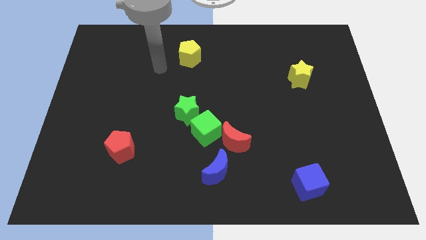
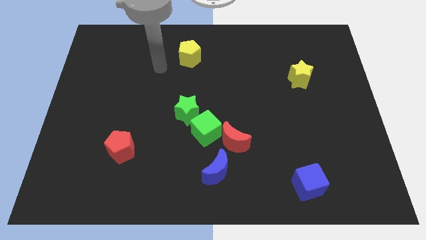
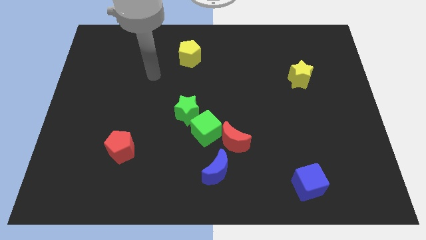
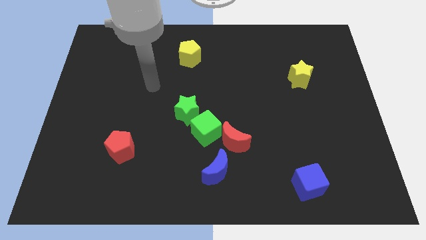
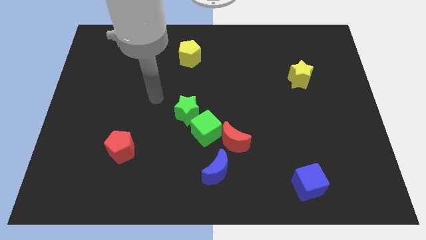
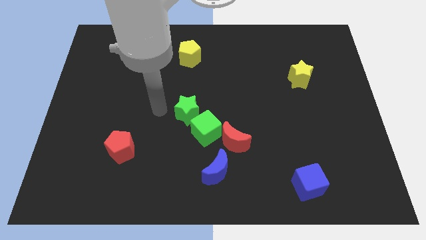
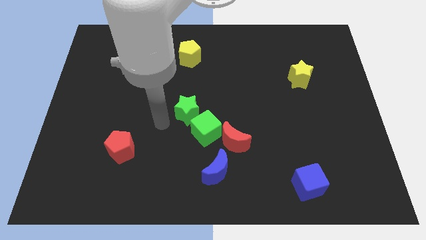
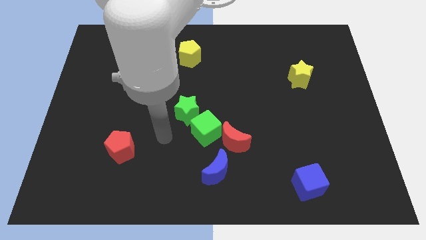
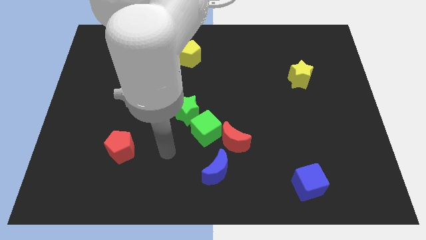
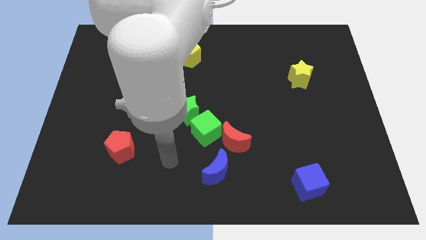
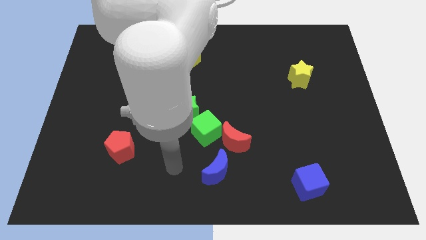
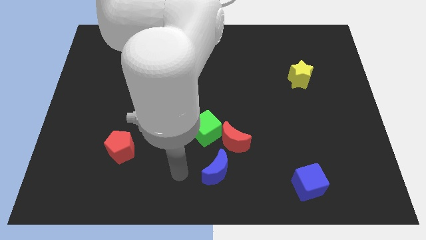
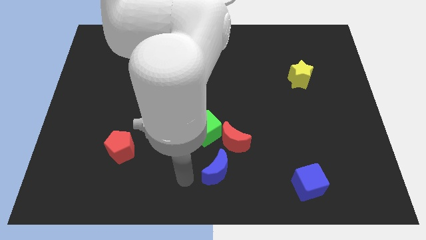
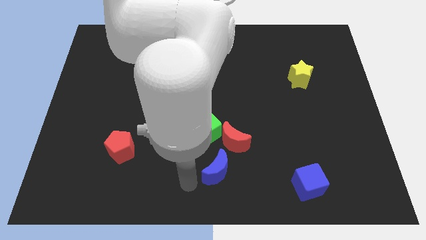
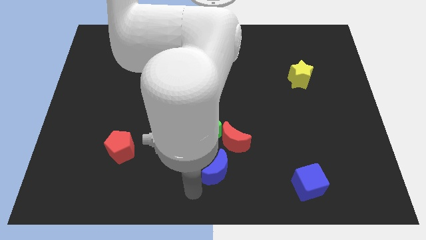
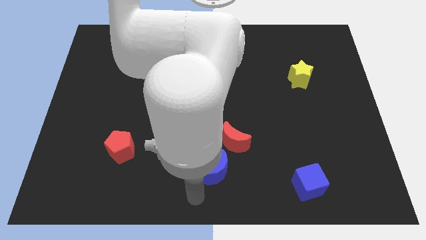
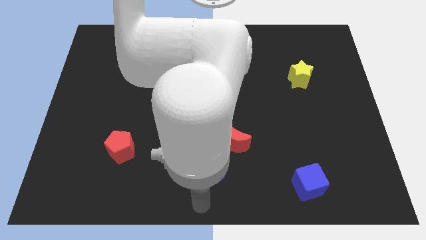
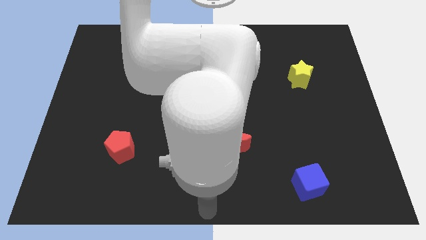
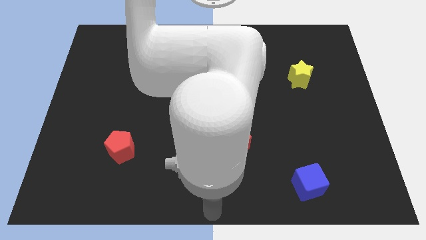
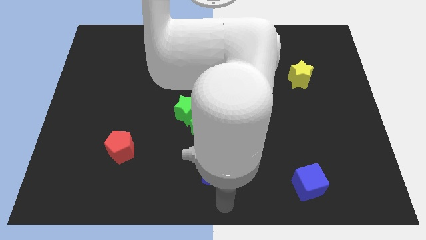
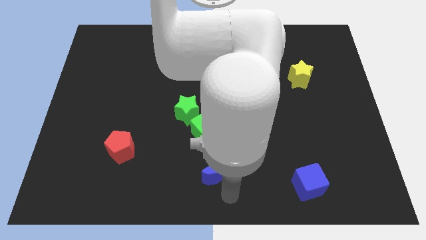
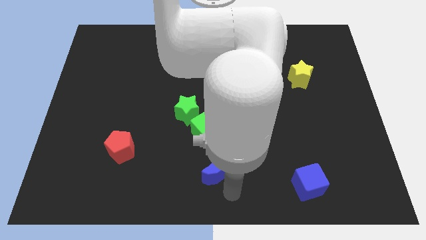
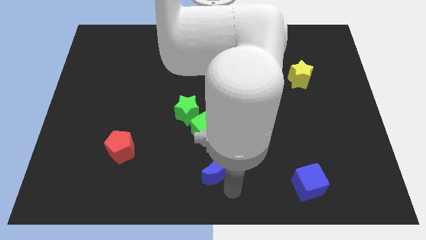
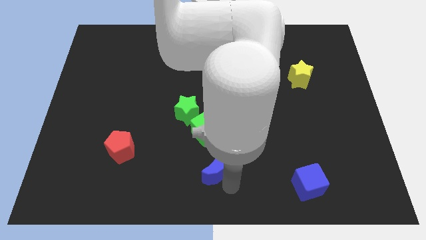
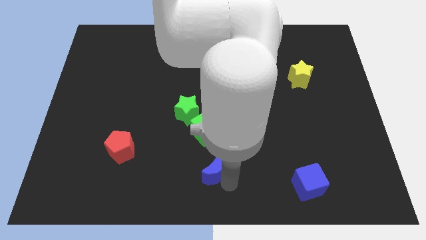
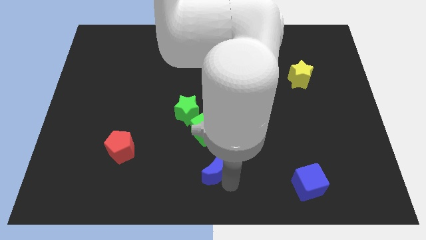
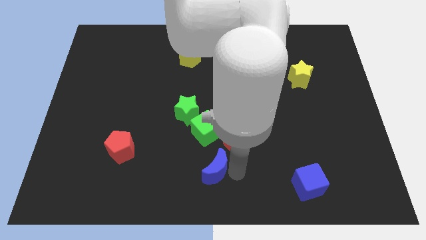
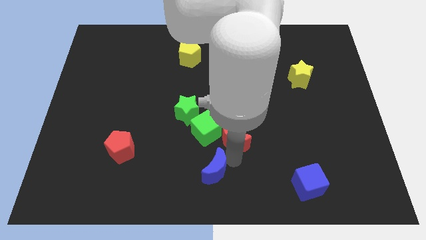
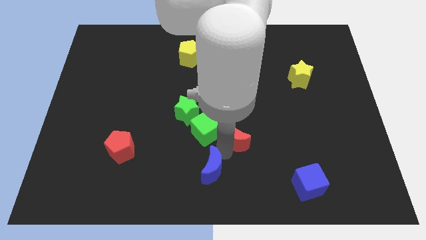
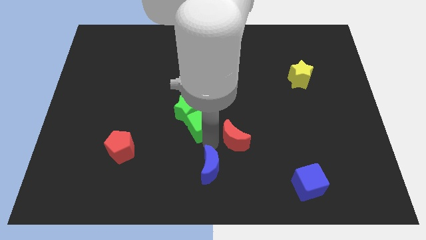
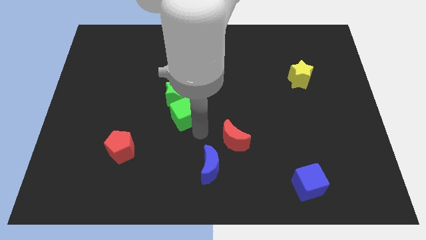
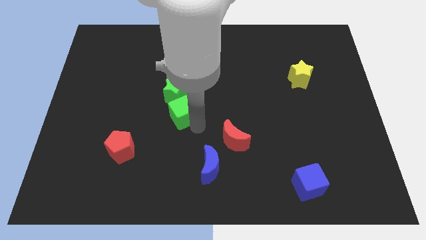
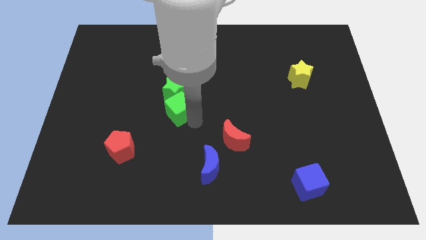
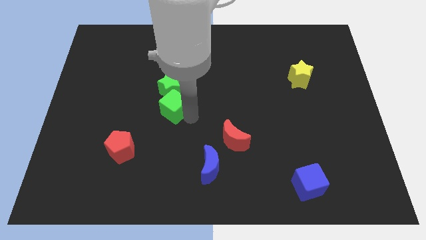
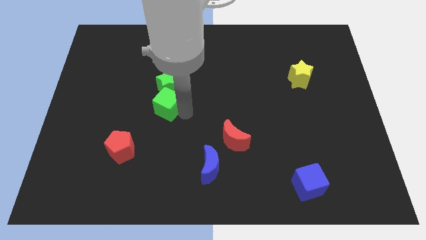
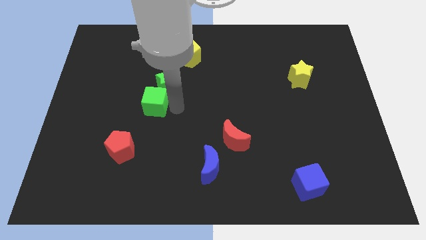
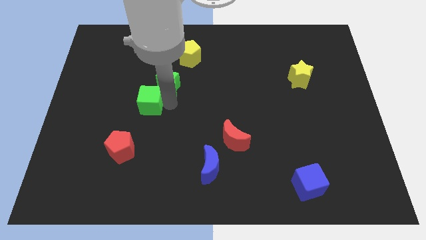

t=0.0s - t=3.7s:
move the green cube and green star towards top

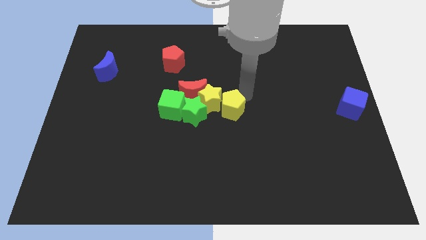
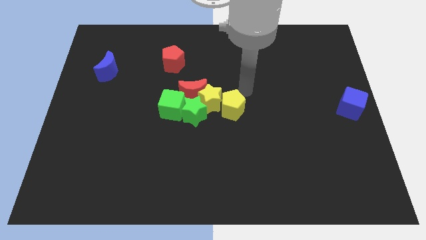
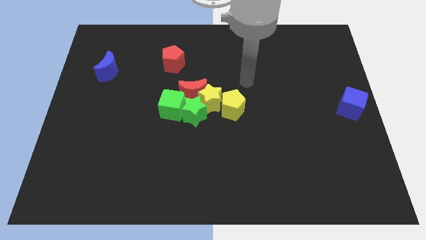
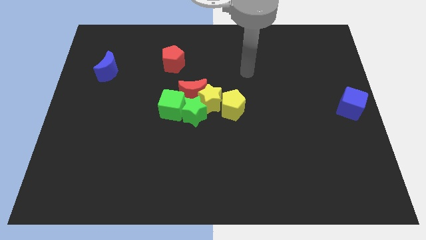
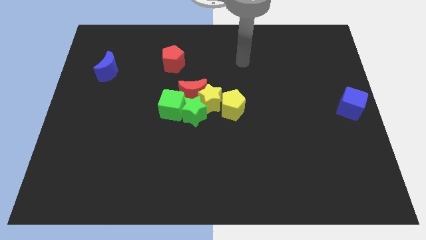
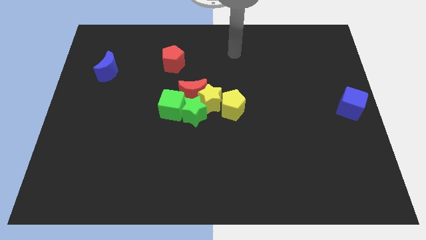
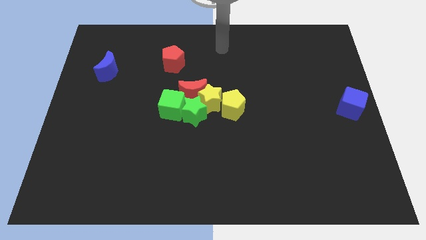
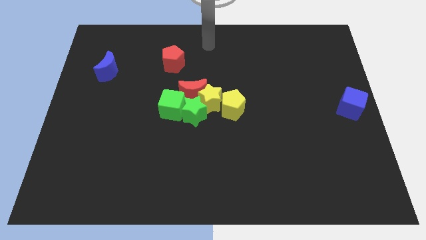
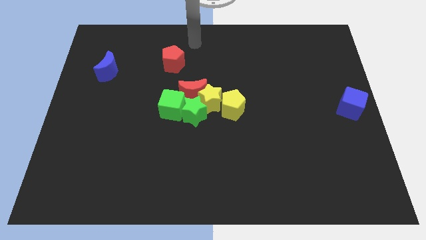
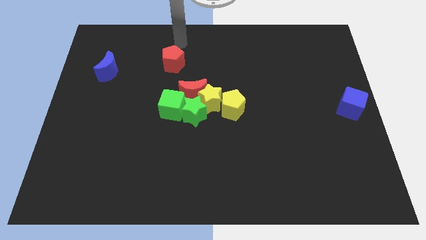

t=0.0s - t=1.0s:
move your arm away from the yellow pentagon

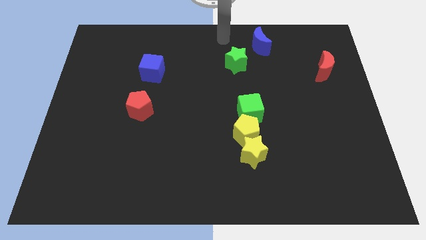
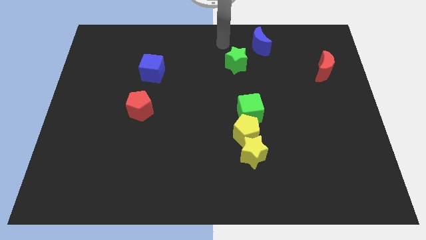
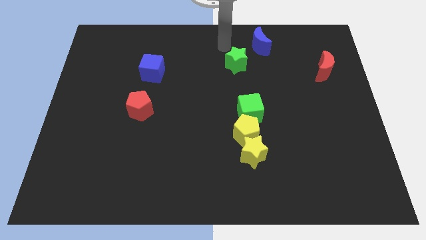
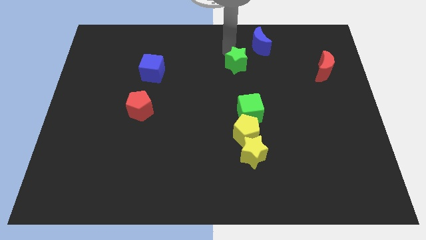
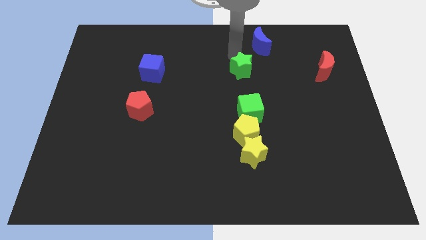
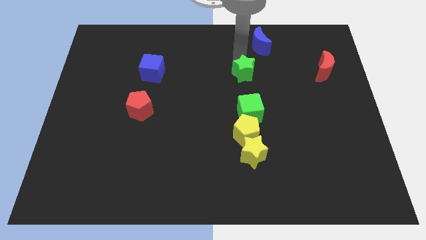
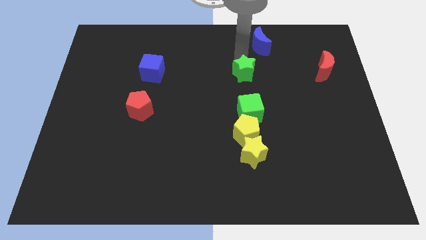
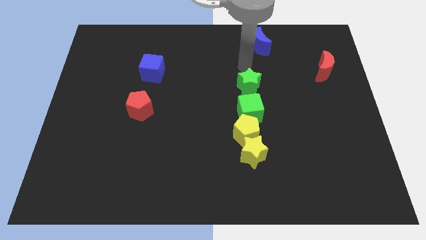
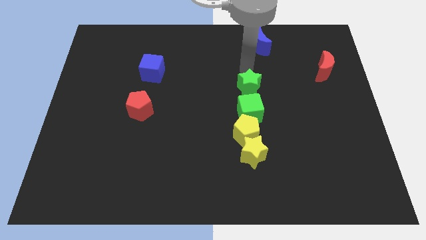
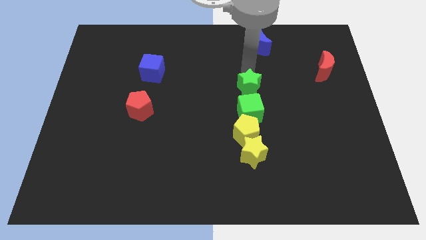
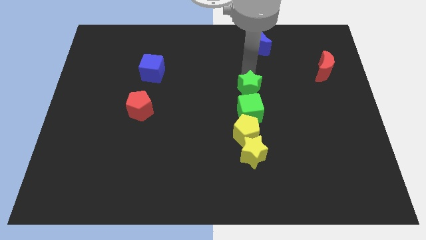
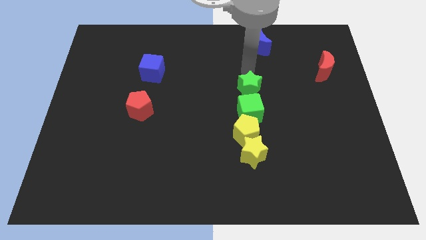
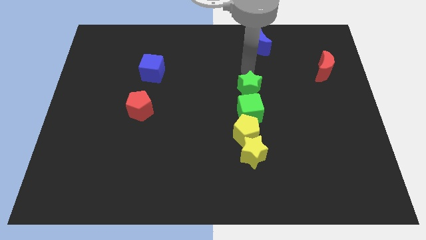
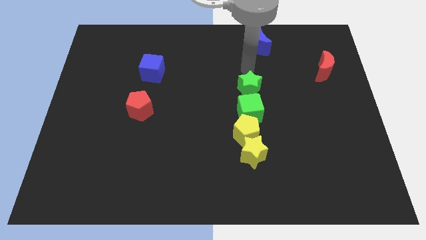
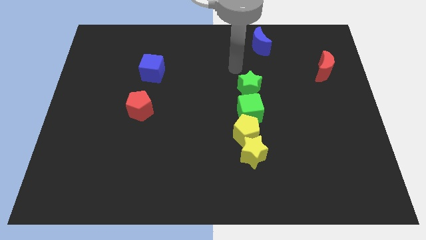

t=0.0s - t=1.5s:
drag the green star close to the green cube

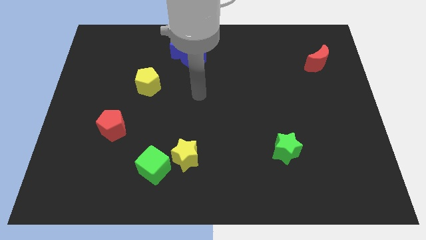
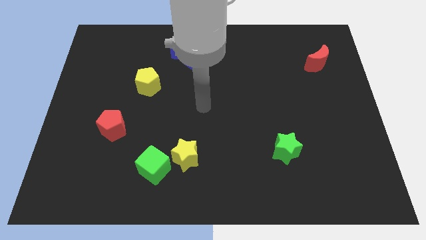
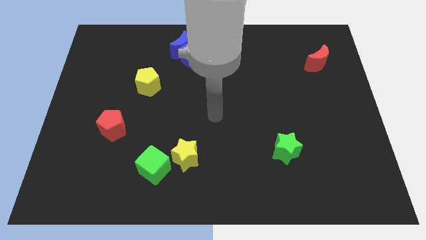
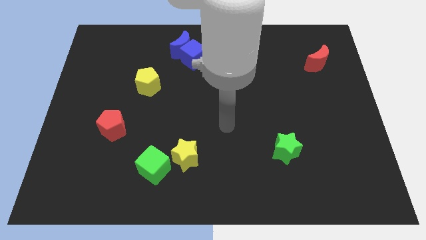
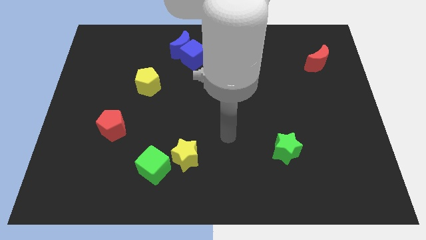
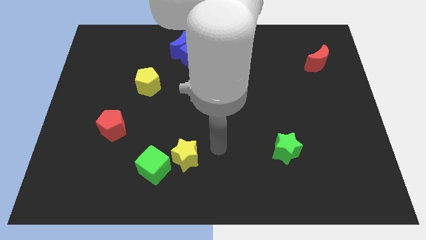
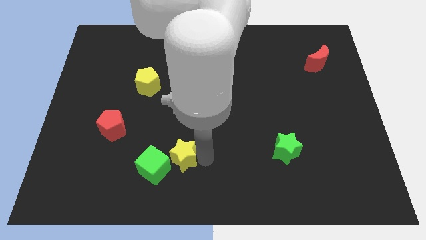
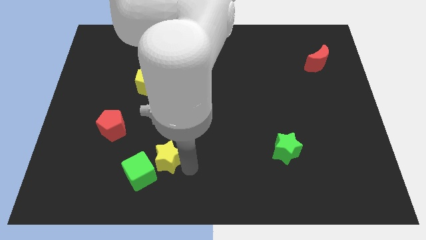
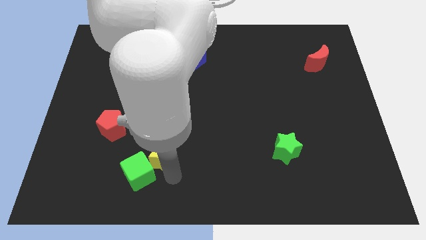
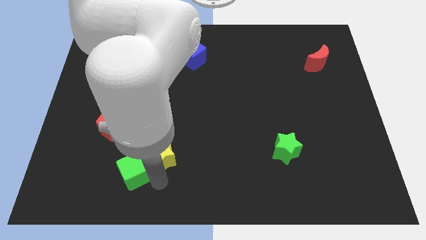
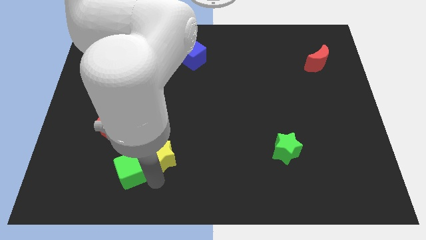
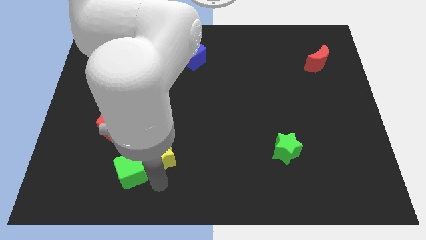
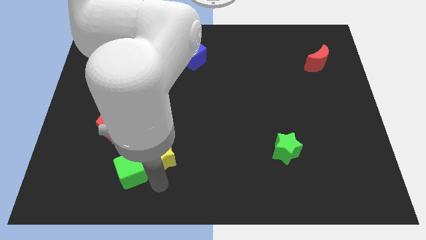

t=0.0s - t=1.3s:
push the green cube with the yellow star towards the bottom left corner of the board

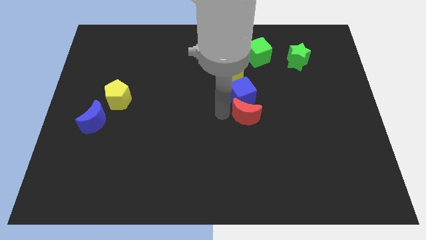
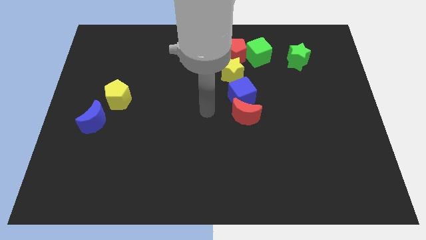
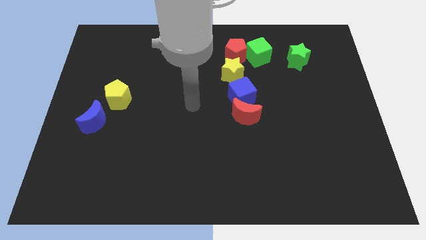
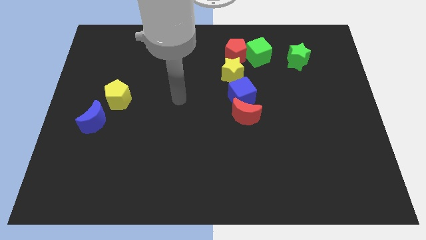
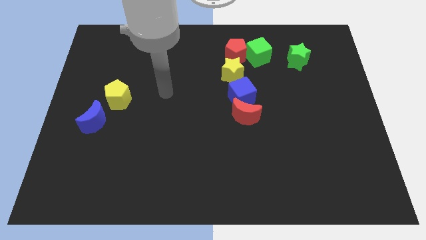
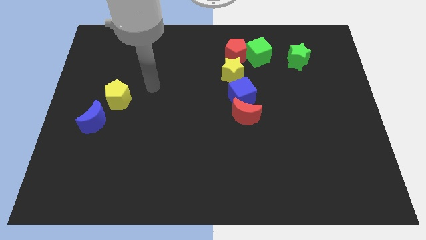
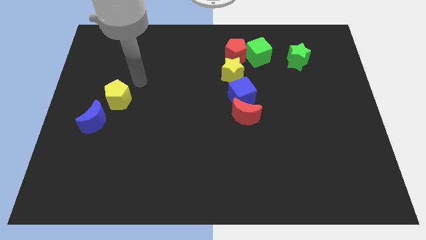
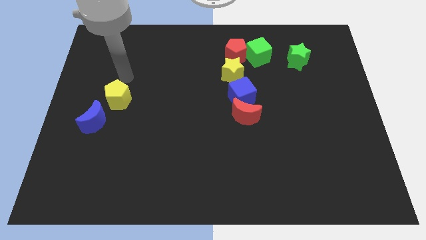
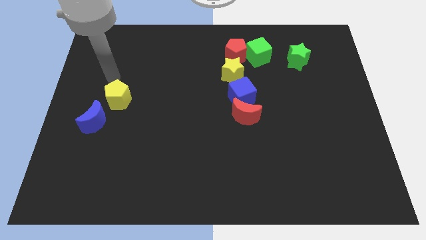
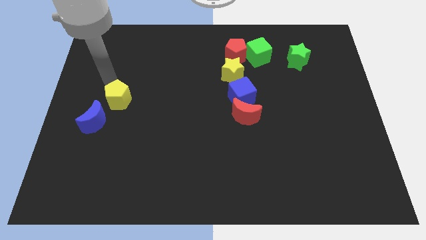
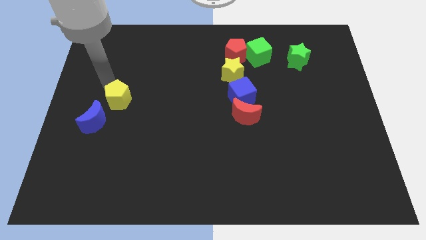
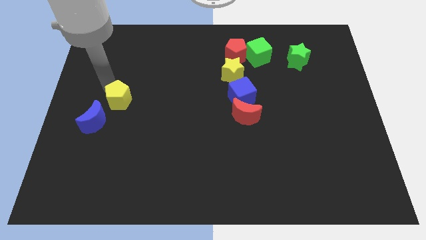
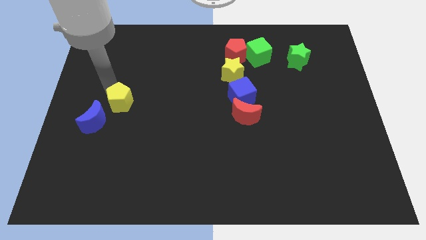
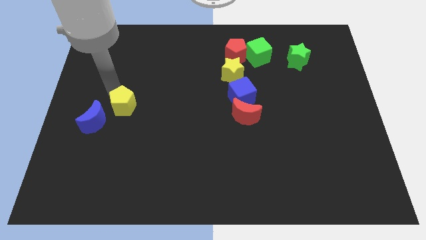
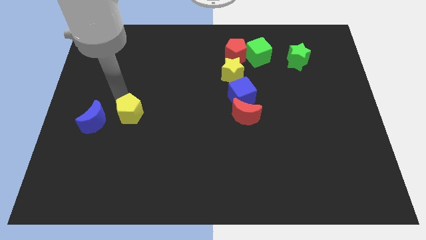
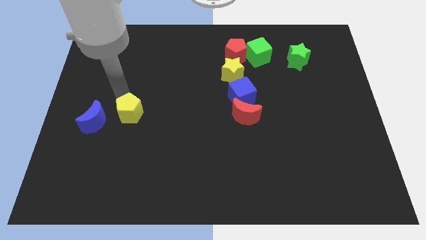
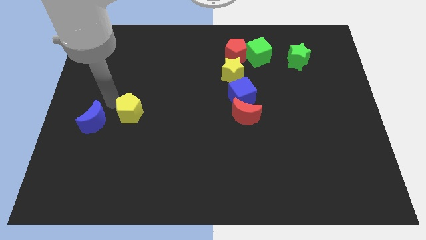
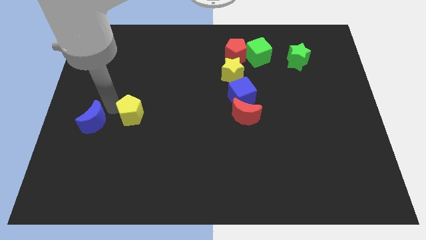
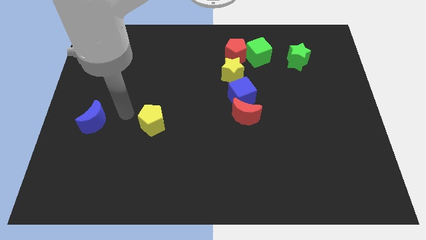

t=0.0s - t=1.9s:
push the yellow pentagon to the right of the blue crescent
